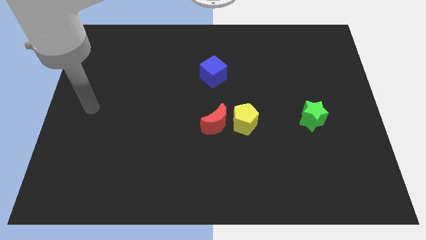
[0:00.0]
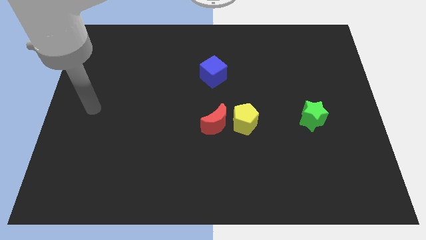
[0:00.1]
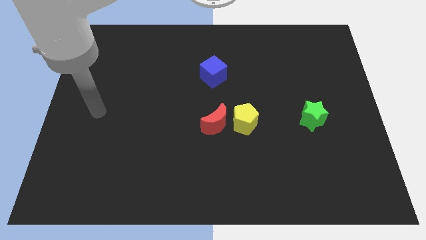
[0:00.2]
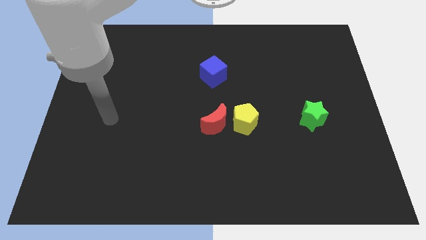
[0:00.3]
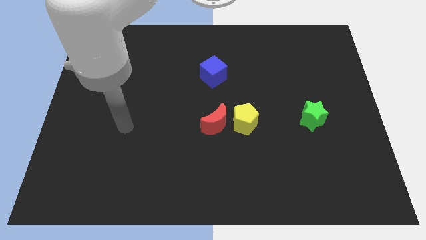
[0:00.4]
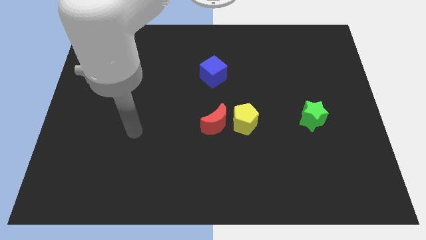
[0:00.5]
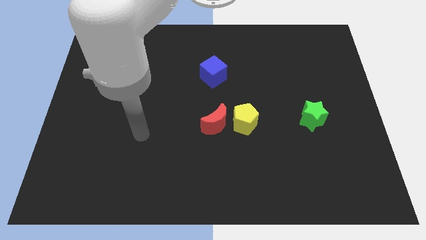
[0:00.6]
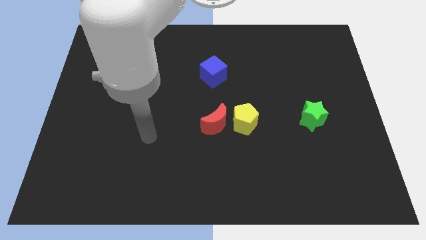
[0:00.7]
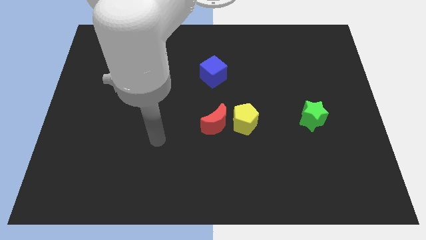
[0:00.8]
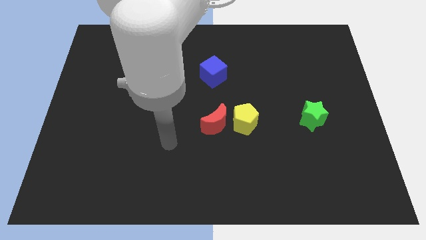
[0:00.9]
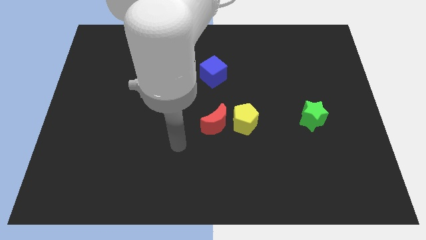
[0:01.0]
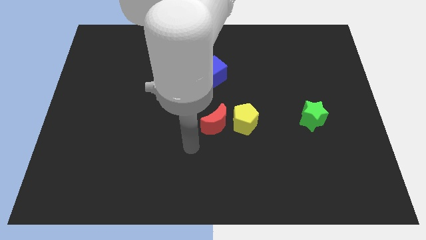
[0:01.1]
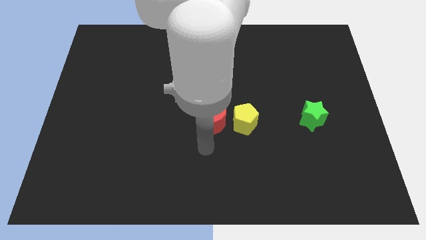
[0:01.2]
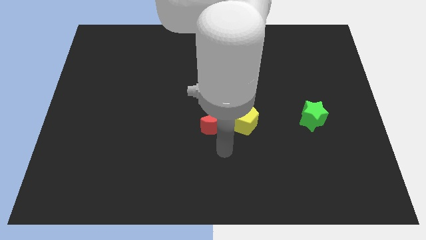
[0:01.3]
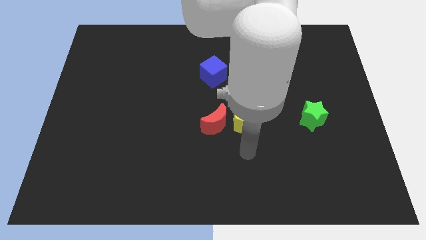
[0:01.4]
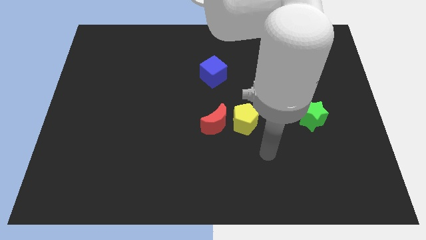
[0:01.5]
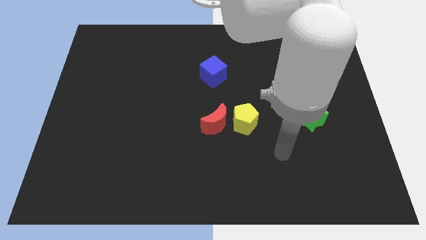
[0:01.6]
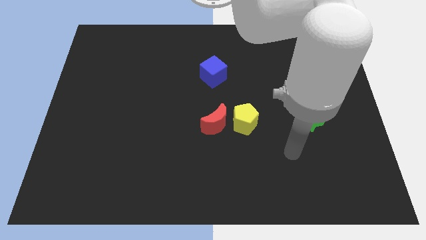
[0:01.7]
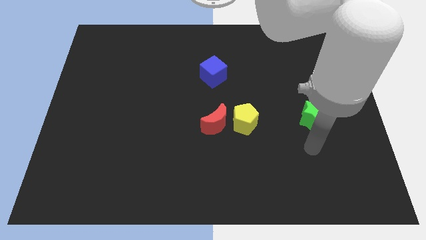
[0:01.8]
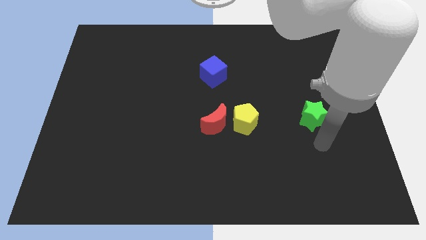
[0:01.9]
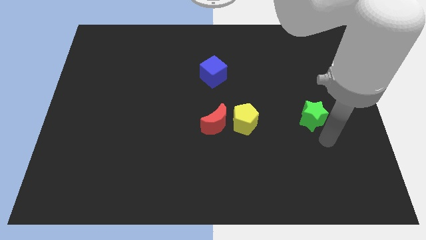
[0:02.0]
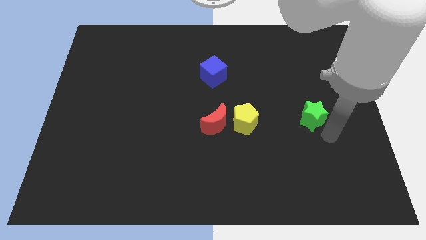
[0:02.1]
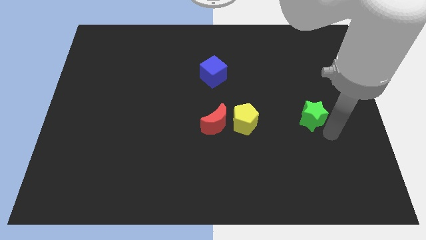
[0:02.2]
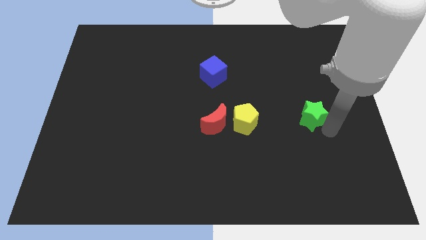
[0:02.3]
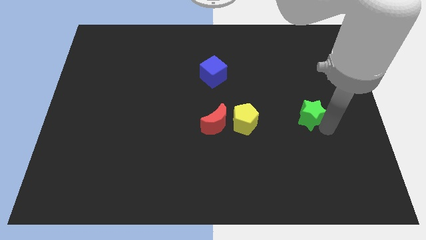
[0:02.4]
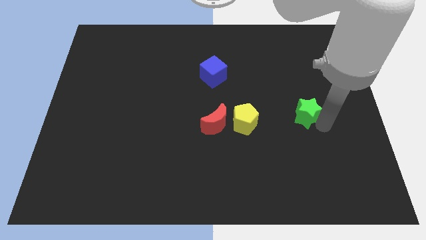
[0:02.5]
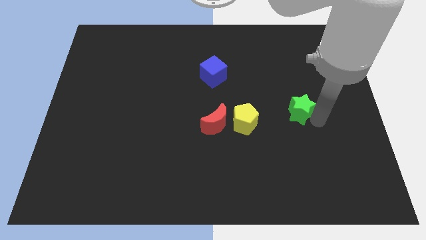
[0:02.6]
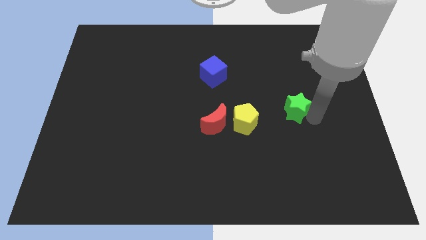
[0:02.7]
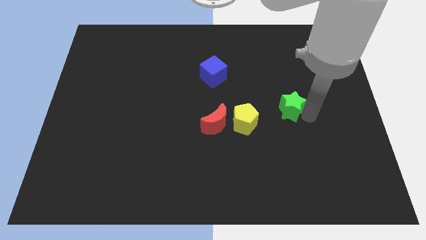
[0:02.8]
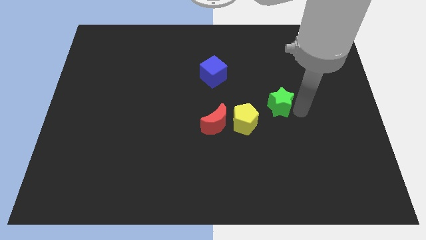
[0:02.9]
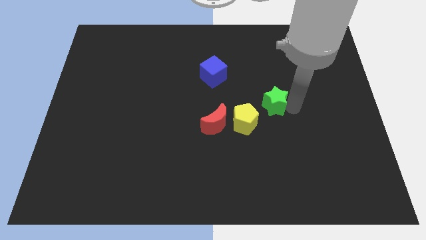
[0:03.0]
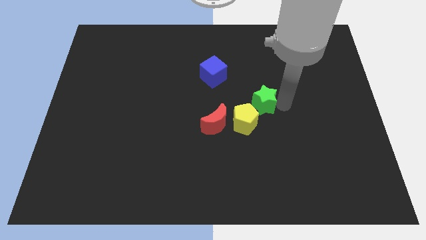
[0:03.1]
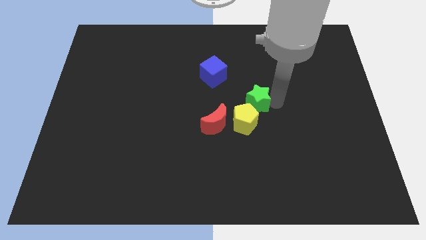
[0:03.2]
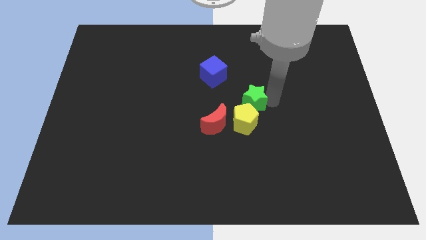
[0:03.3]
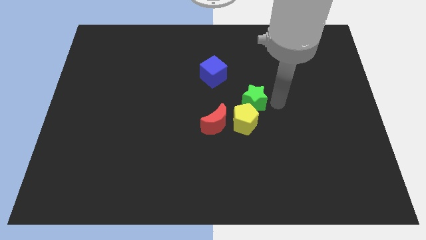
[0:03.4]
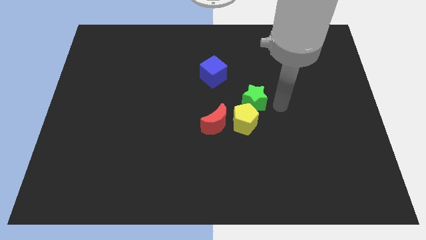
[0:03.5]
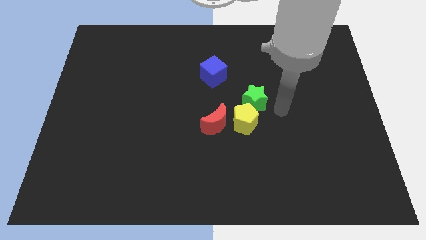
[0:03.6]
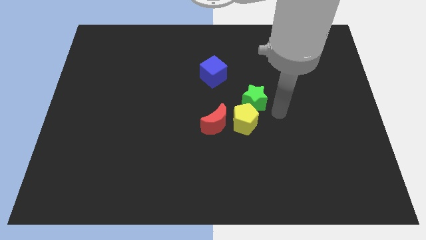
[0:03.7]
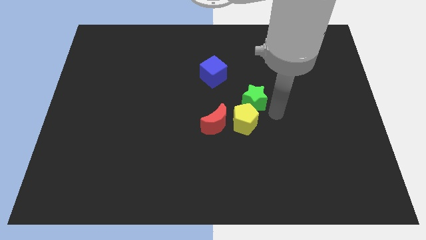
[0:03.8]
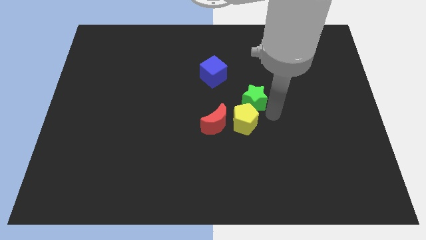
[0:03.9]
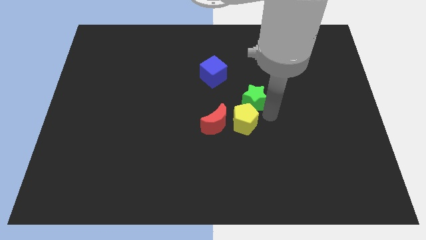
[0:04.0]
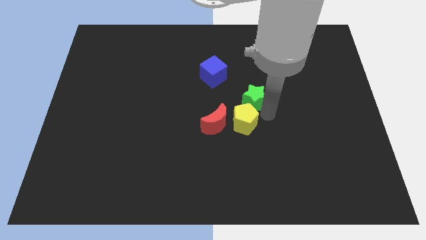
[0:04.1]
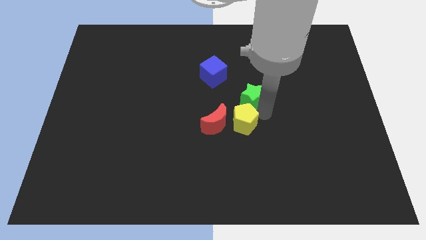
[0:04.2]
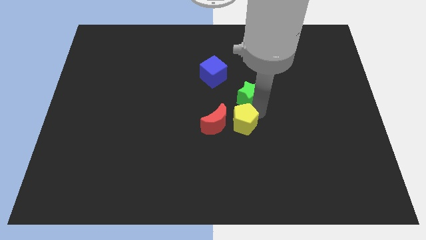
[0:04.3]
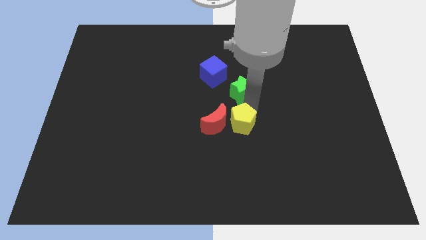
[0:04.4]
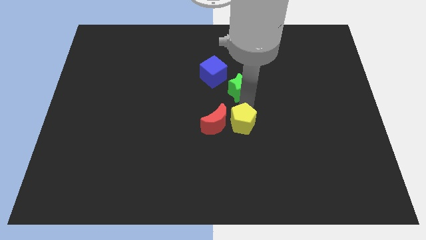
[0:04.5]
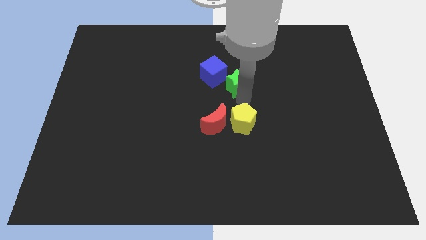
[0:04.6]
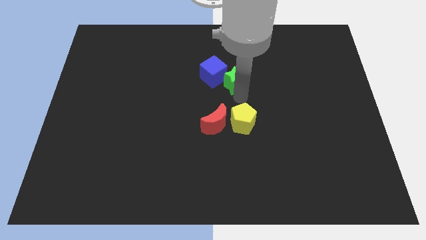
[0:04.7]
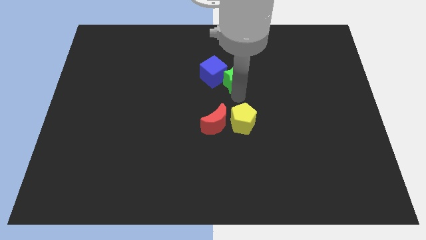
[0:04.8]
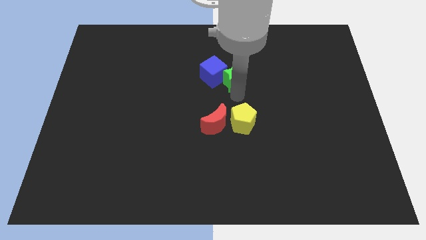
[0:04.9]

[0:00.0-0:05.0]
slide the green block close to the blue block

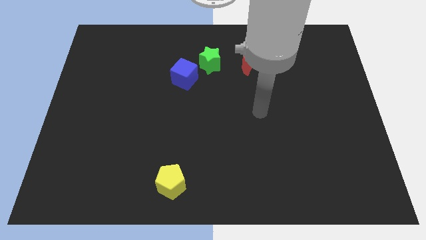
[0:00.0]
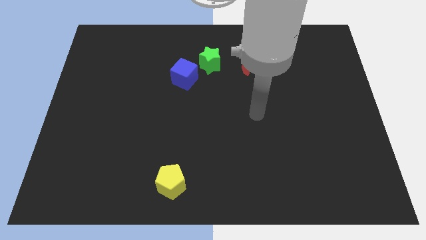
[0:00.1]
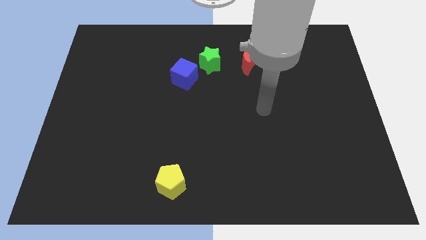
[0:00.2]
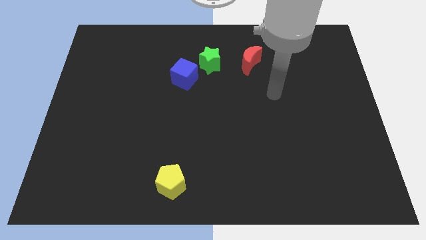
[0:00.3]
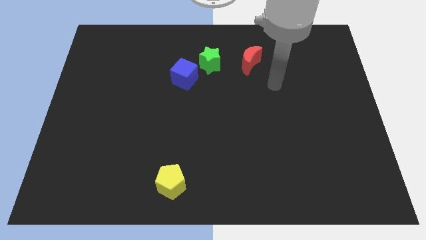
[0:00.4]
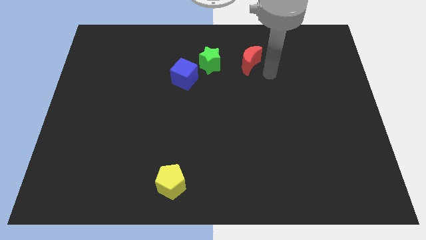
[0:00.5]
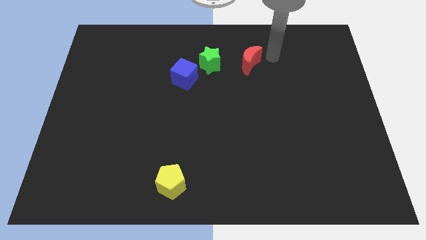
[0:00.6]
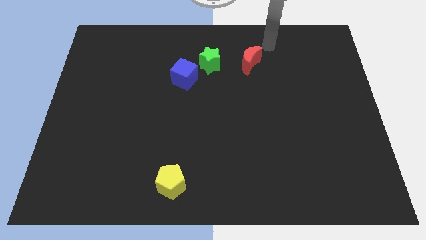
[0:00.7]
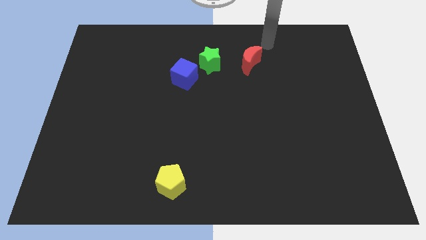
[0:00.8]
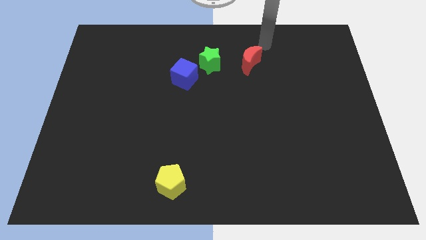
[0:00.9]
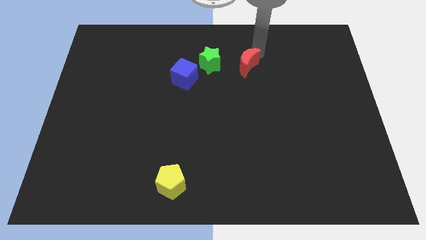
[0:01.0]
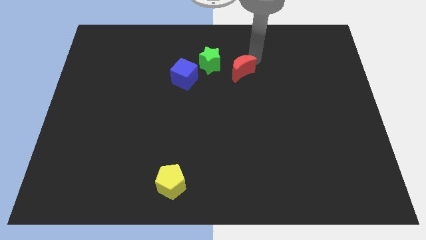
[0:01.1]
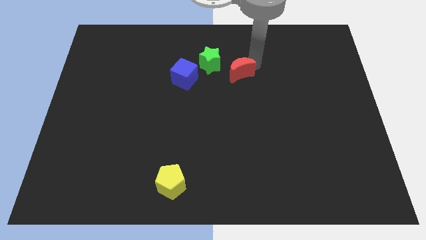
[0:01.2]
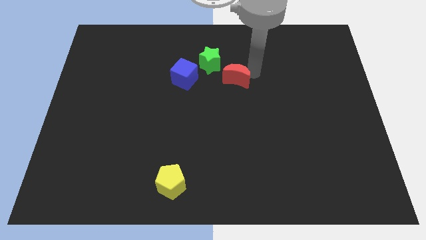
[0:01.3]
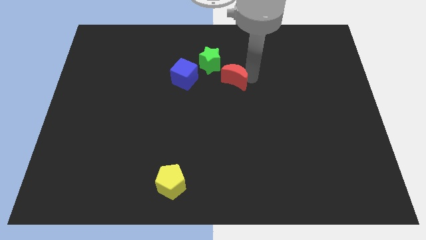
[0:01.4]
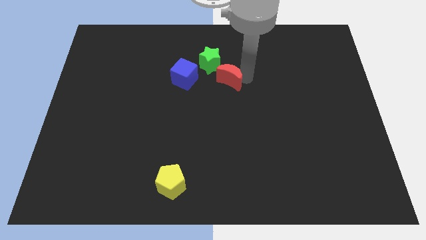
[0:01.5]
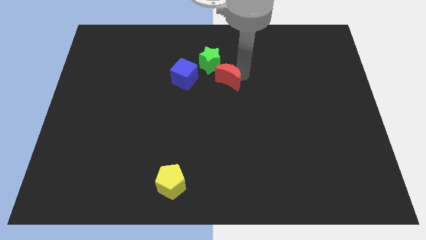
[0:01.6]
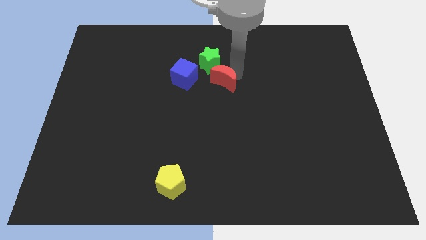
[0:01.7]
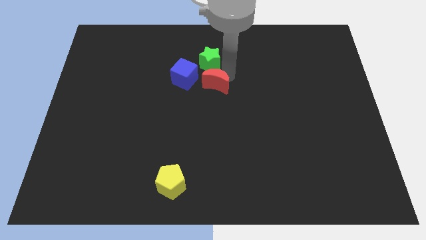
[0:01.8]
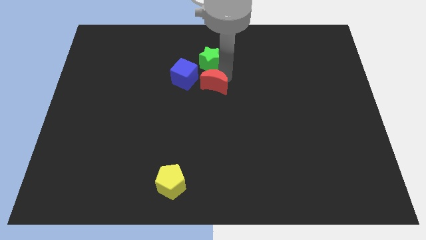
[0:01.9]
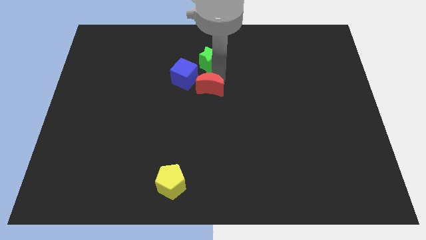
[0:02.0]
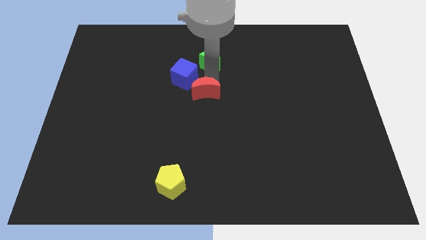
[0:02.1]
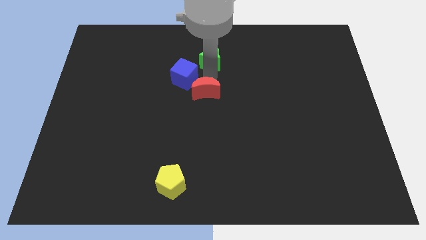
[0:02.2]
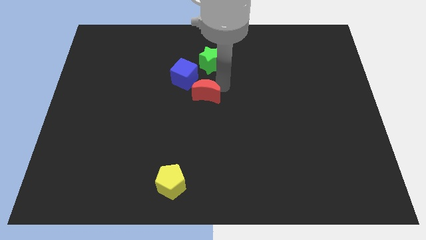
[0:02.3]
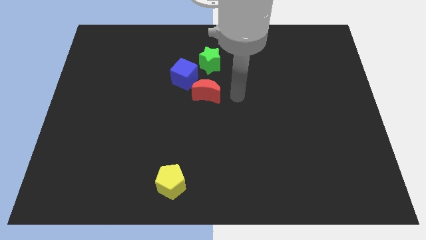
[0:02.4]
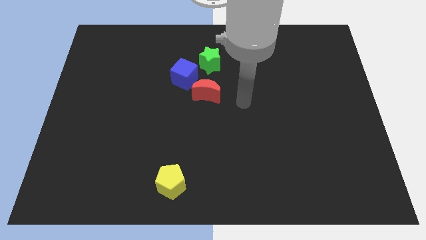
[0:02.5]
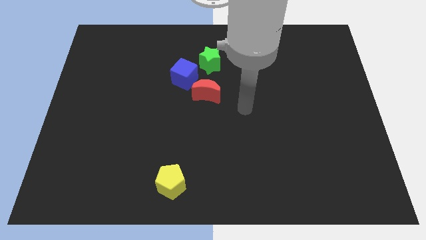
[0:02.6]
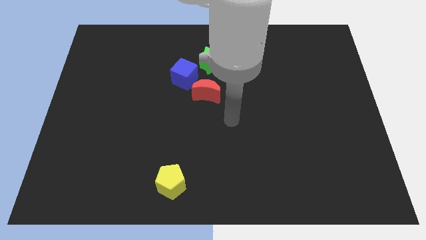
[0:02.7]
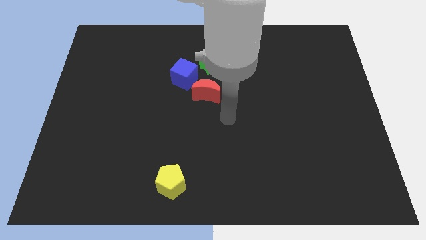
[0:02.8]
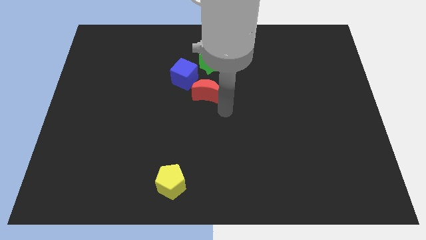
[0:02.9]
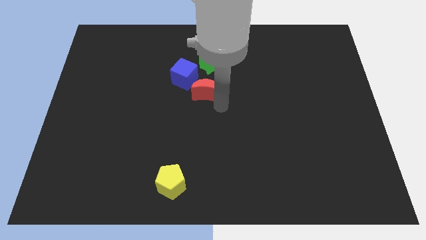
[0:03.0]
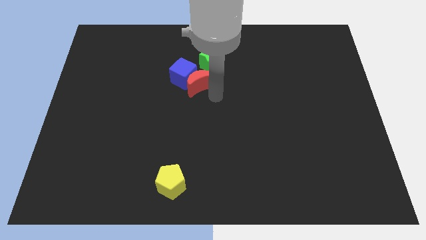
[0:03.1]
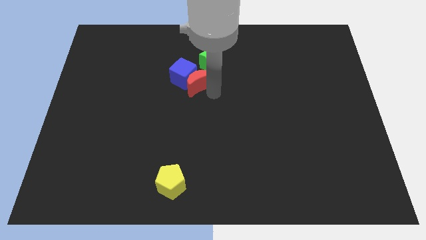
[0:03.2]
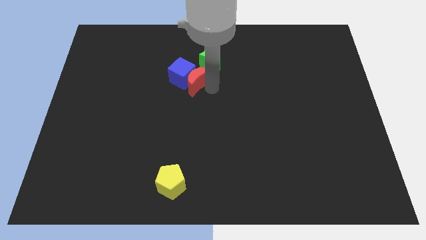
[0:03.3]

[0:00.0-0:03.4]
move the red moon towards the cube
